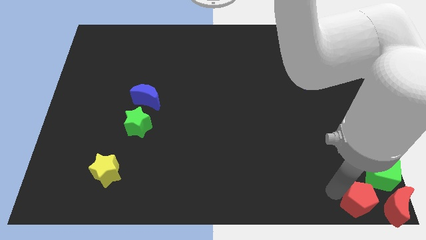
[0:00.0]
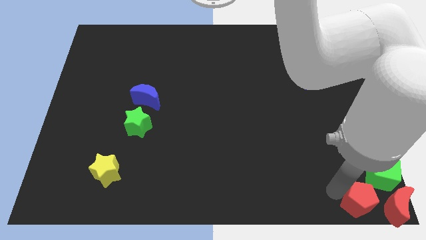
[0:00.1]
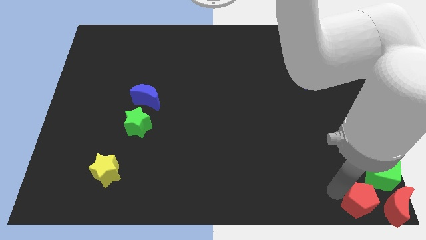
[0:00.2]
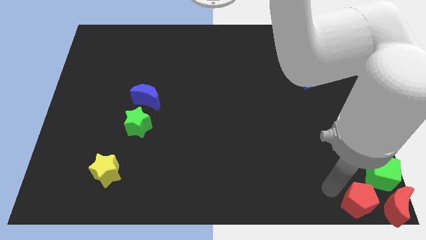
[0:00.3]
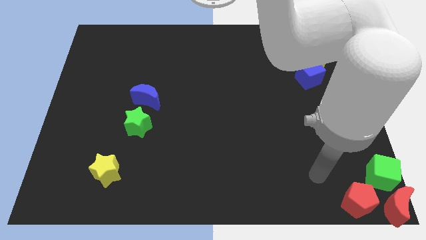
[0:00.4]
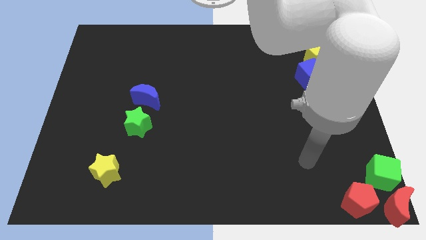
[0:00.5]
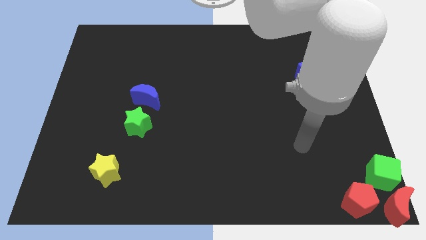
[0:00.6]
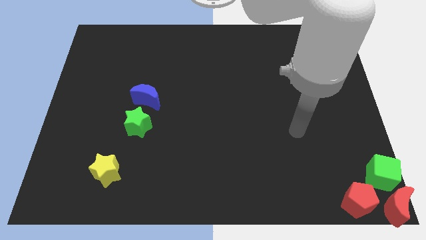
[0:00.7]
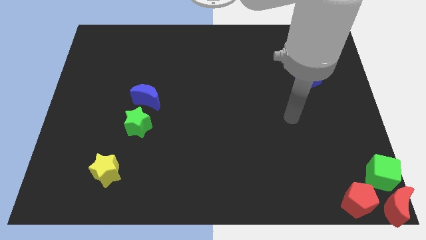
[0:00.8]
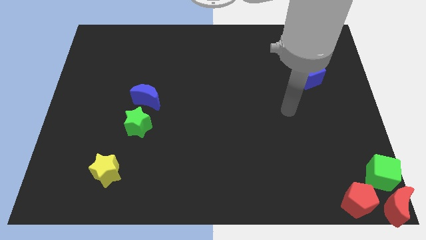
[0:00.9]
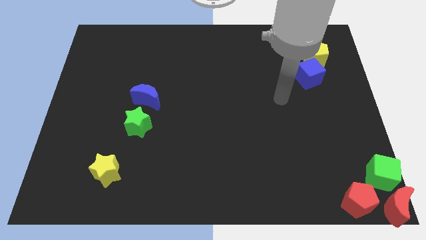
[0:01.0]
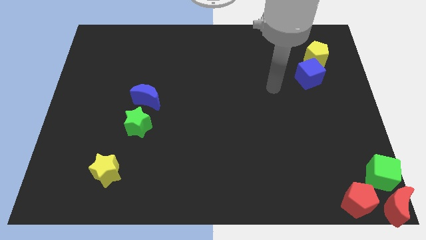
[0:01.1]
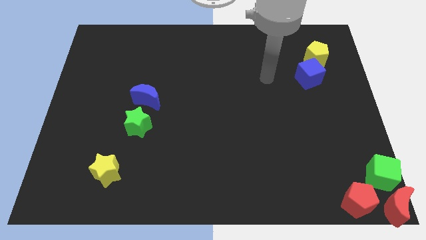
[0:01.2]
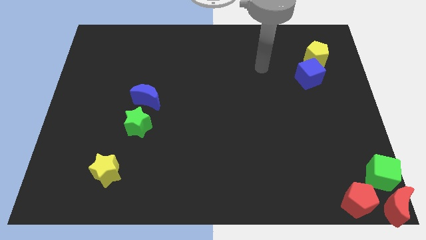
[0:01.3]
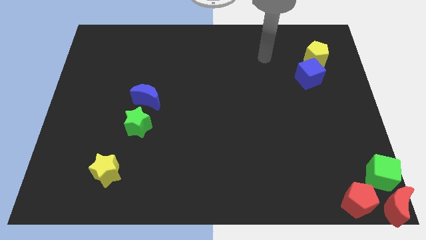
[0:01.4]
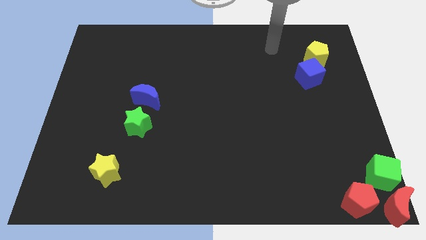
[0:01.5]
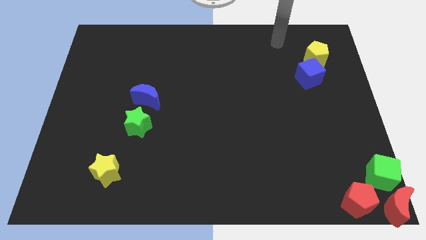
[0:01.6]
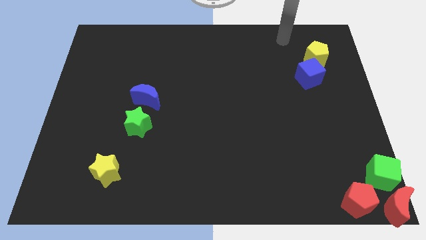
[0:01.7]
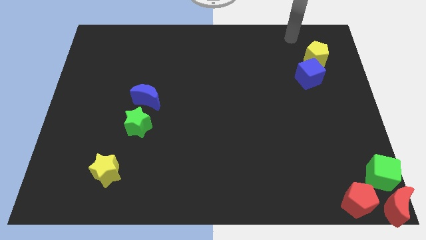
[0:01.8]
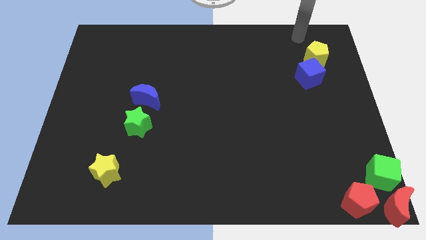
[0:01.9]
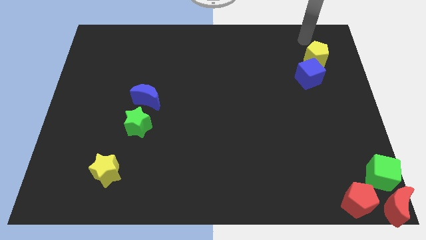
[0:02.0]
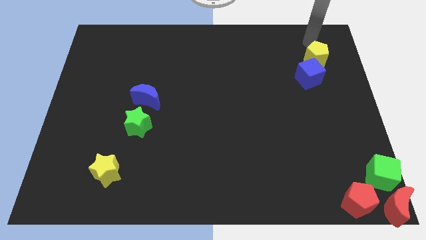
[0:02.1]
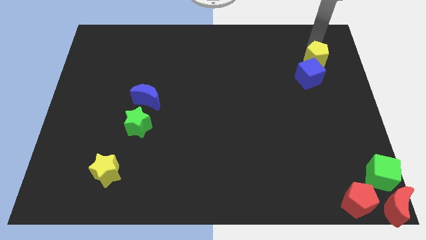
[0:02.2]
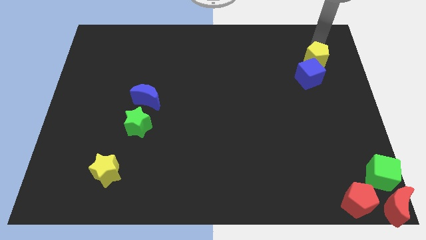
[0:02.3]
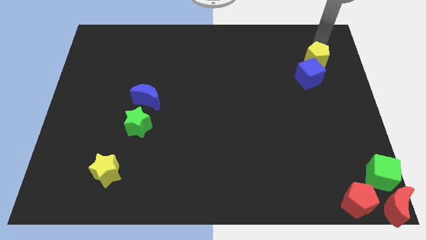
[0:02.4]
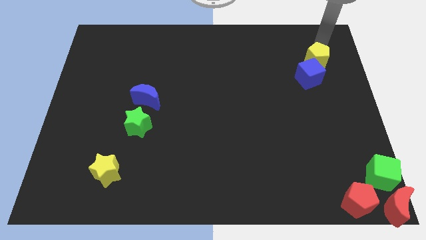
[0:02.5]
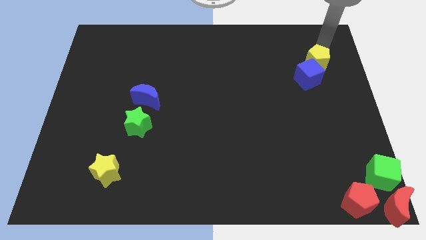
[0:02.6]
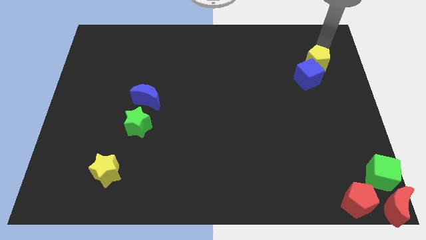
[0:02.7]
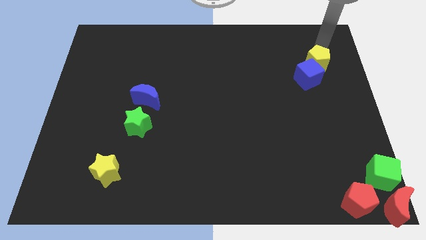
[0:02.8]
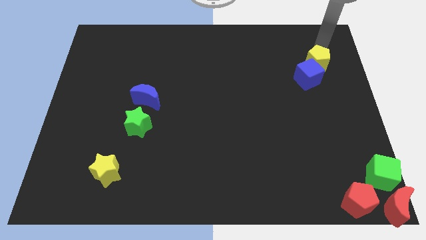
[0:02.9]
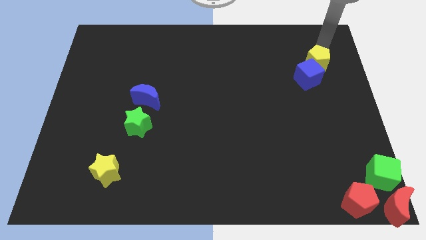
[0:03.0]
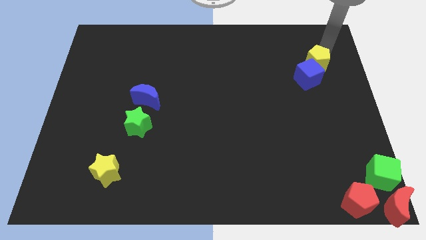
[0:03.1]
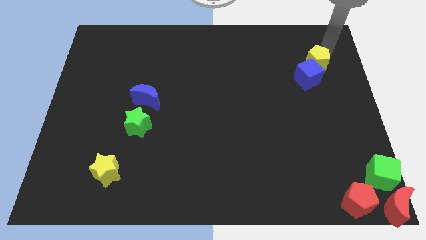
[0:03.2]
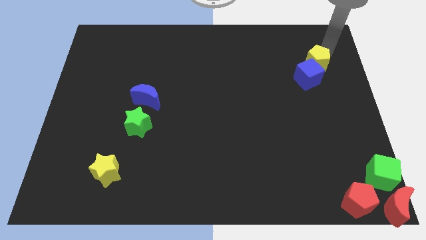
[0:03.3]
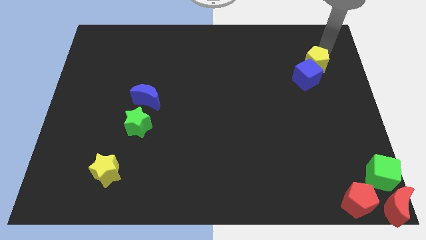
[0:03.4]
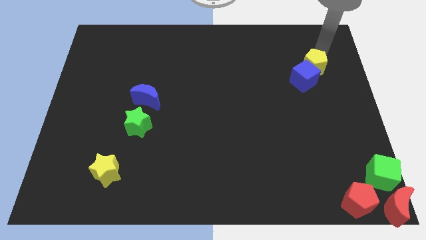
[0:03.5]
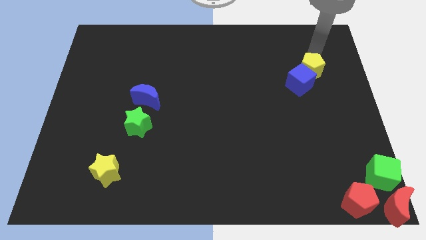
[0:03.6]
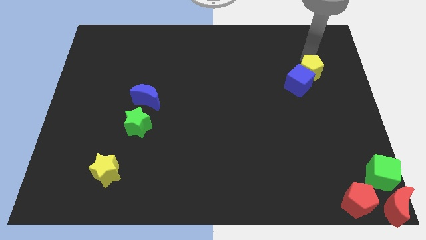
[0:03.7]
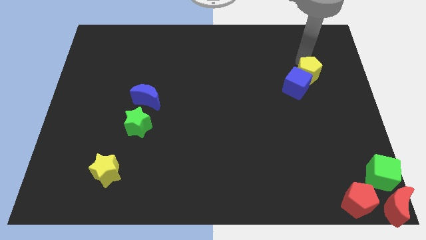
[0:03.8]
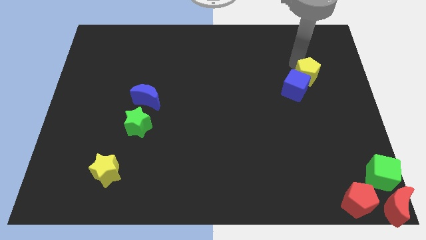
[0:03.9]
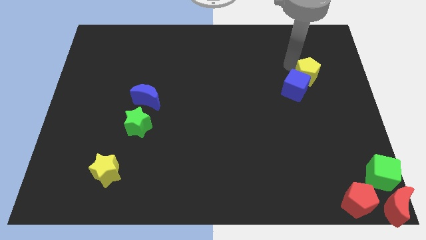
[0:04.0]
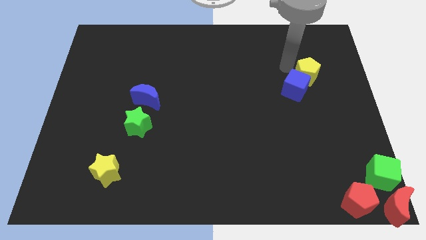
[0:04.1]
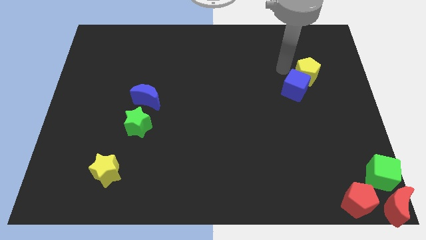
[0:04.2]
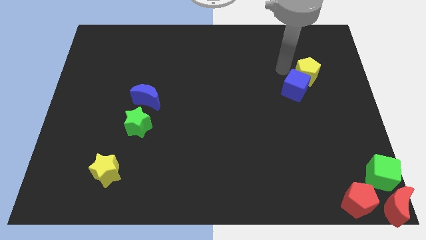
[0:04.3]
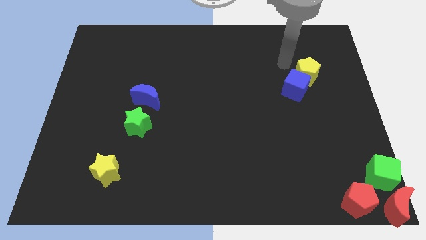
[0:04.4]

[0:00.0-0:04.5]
push the yellow pentagon into the blue cube

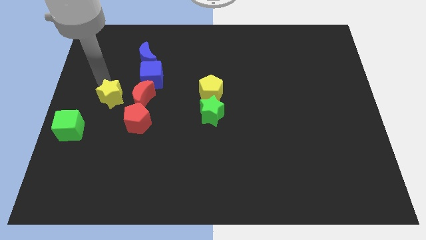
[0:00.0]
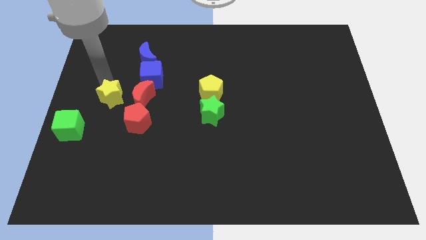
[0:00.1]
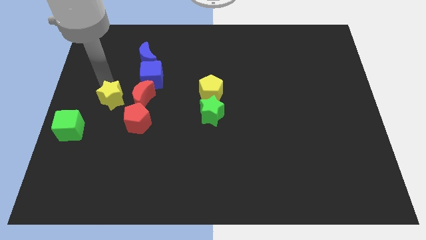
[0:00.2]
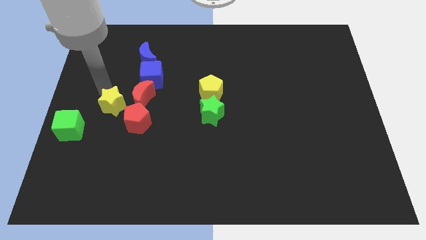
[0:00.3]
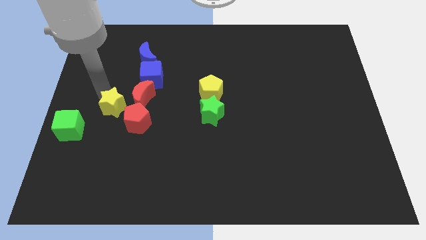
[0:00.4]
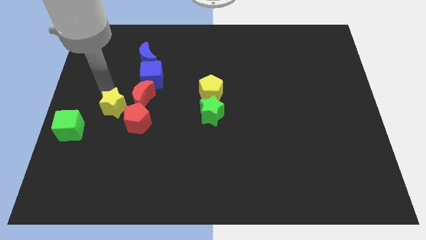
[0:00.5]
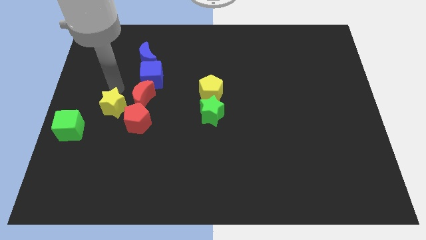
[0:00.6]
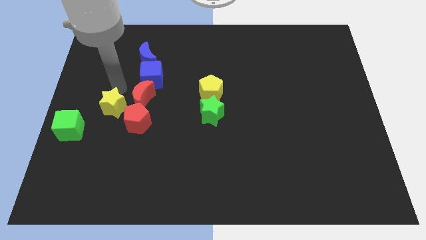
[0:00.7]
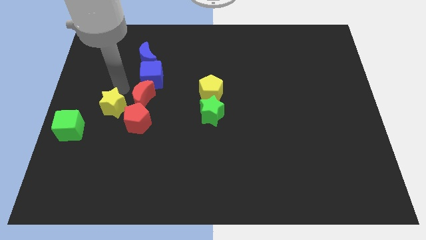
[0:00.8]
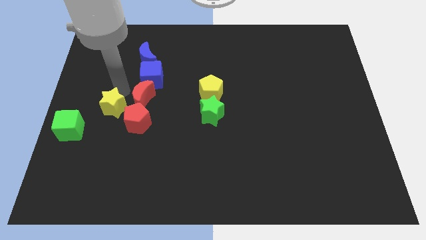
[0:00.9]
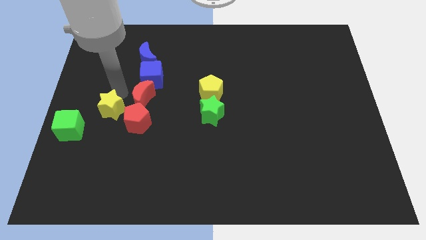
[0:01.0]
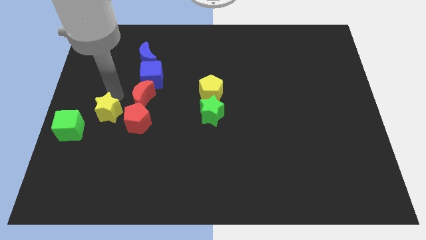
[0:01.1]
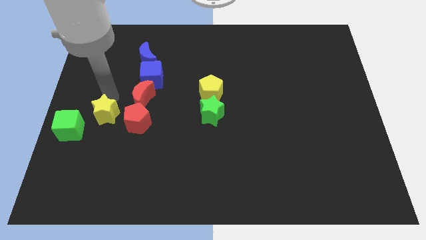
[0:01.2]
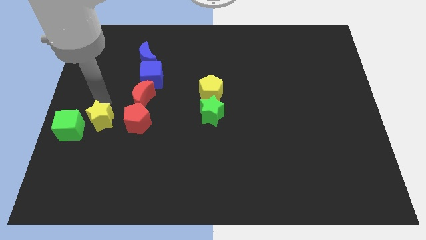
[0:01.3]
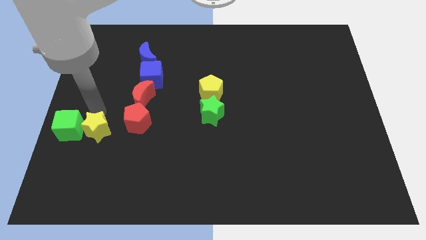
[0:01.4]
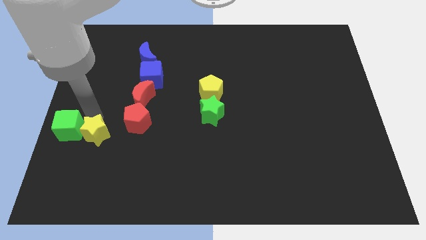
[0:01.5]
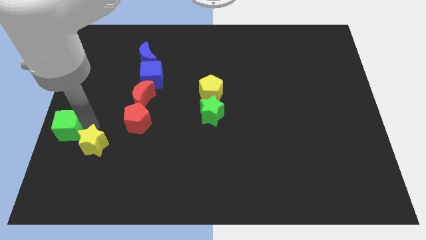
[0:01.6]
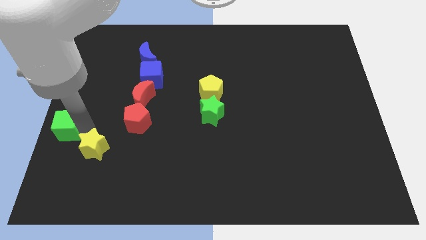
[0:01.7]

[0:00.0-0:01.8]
push the yellow star slightly towards down

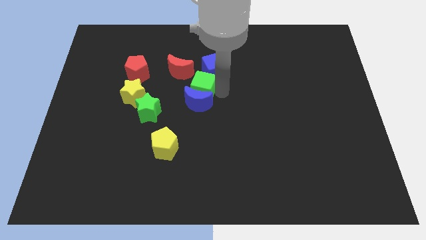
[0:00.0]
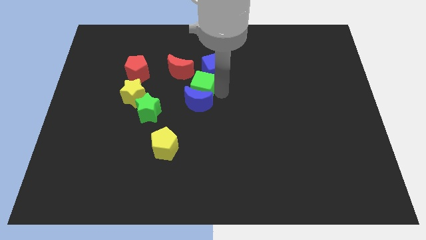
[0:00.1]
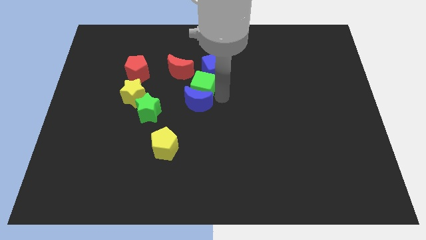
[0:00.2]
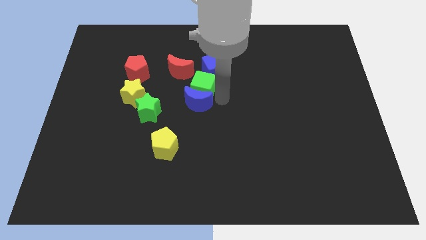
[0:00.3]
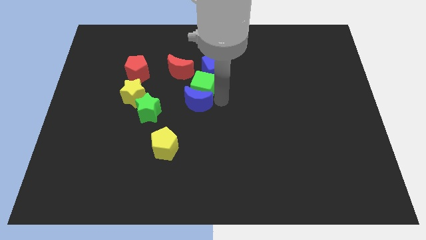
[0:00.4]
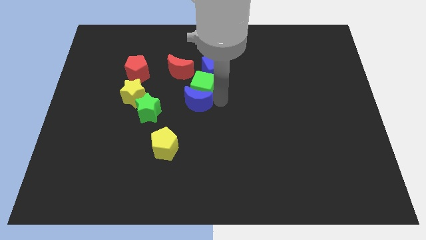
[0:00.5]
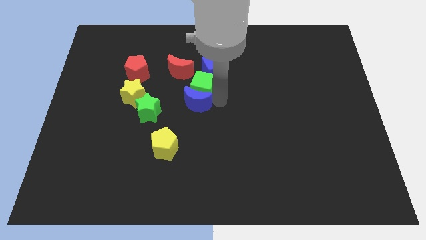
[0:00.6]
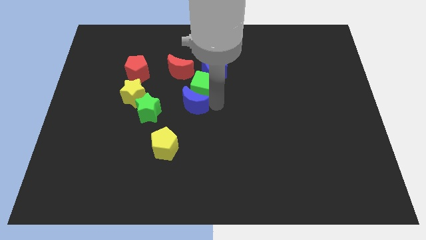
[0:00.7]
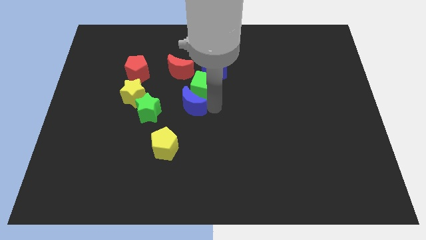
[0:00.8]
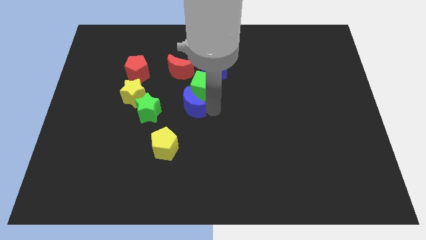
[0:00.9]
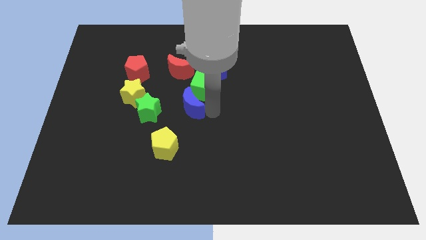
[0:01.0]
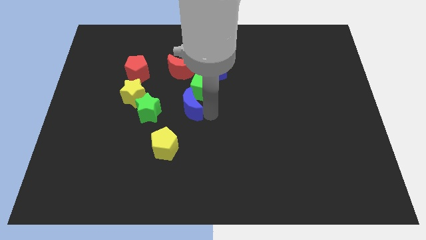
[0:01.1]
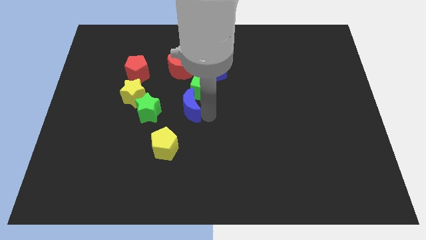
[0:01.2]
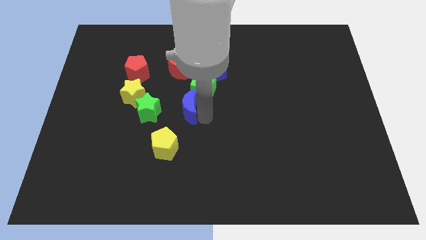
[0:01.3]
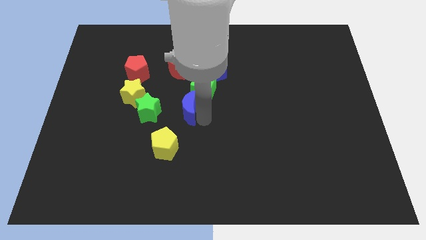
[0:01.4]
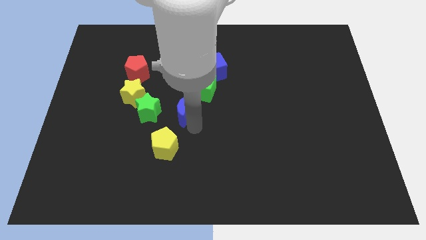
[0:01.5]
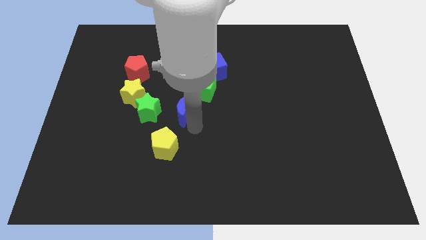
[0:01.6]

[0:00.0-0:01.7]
separate the blue moon and the green cube

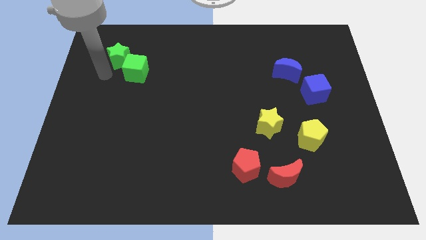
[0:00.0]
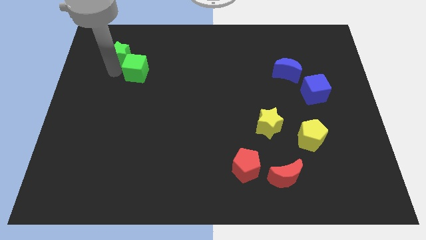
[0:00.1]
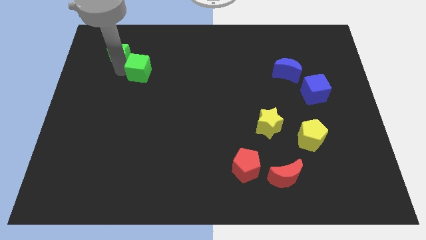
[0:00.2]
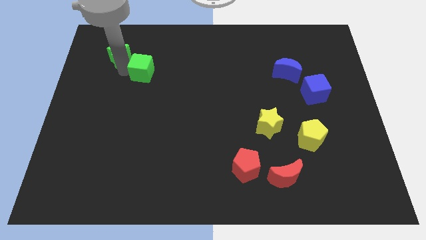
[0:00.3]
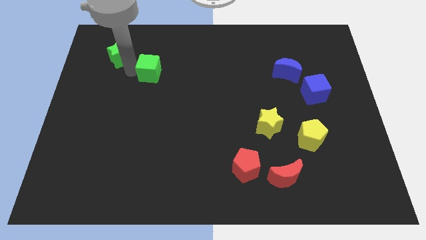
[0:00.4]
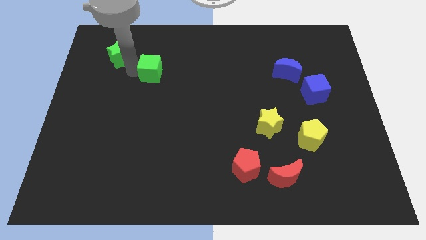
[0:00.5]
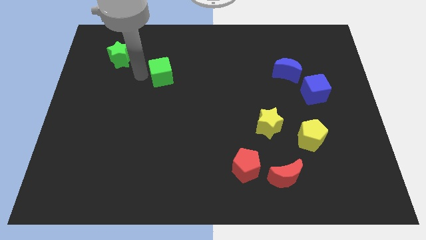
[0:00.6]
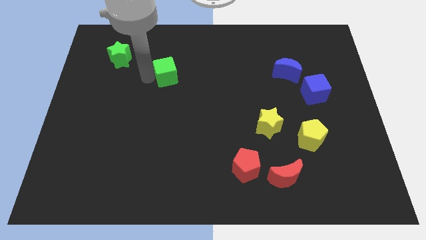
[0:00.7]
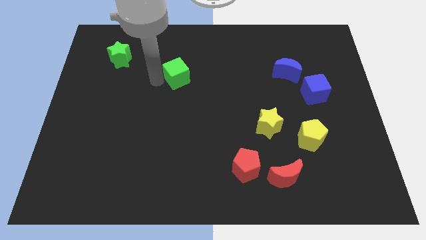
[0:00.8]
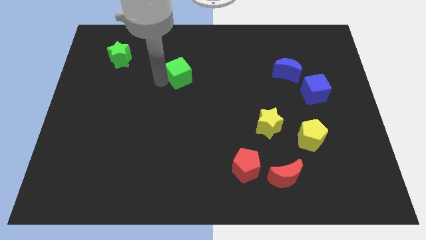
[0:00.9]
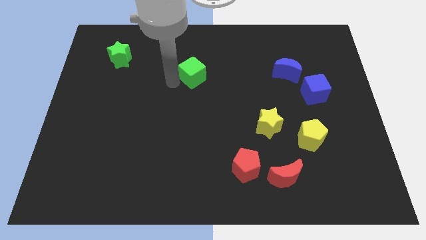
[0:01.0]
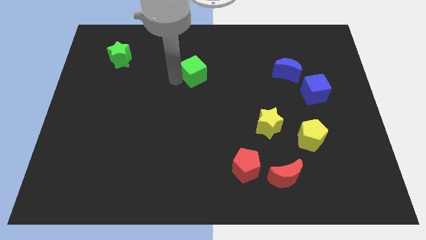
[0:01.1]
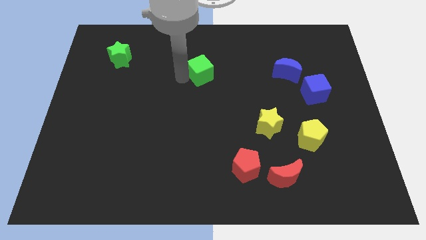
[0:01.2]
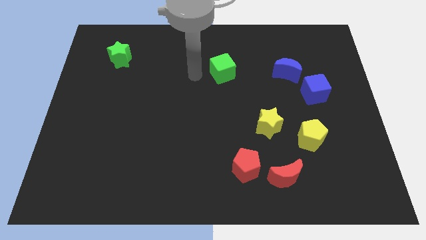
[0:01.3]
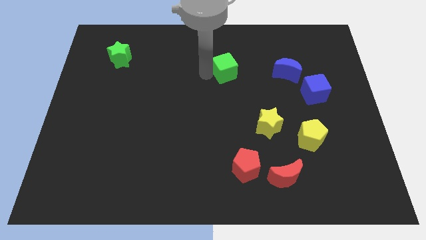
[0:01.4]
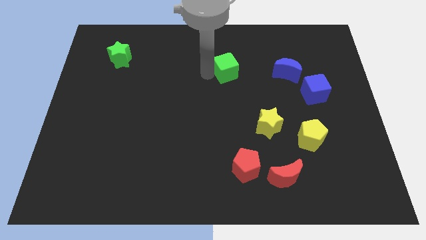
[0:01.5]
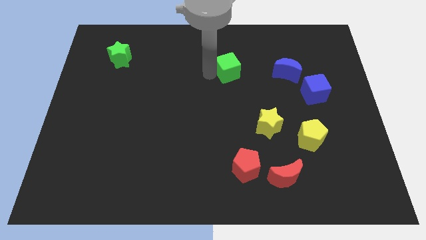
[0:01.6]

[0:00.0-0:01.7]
separate the green cube from the green star
